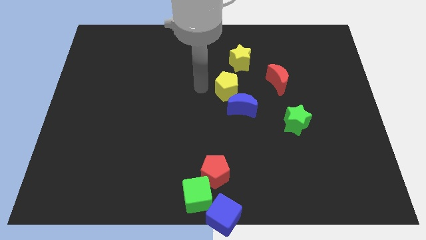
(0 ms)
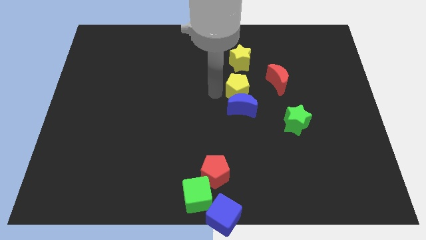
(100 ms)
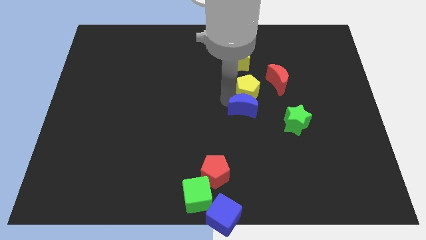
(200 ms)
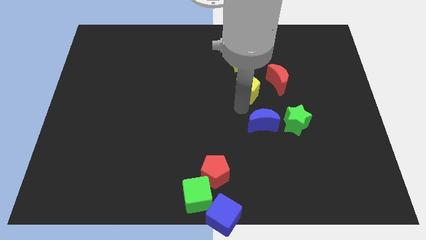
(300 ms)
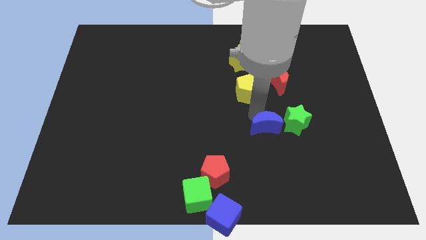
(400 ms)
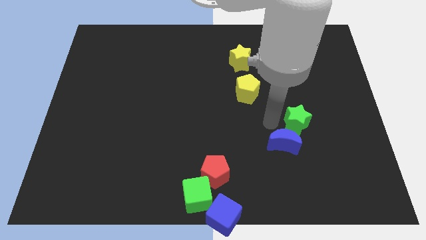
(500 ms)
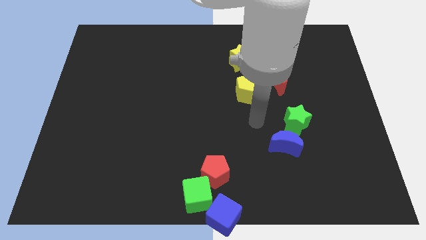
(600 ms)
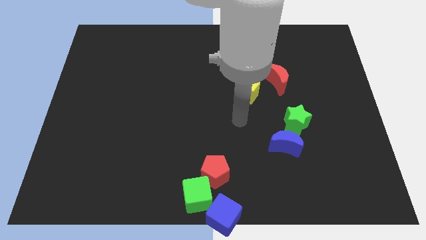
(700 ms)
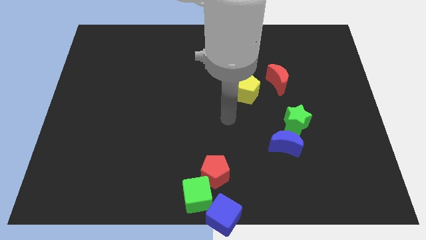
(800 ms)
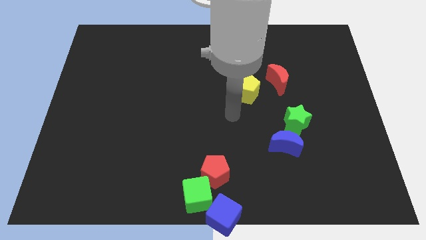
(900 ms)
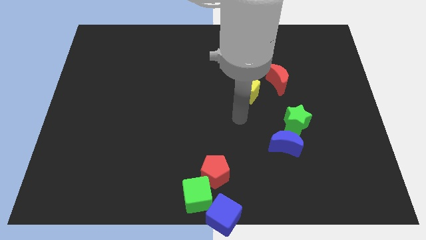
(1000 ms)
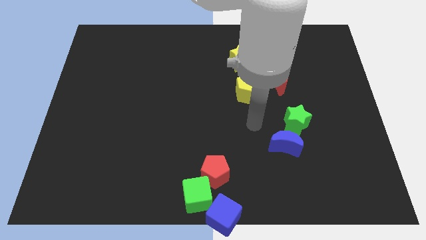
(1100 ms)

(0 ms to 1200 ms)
move the blue crescent to the bottom of the green star

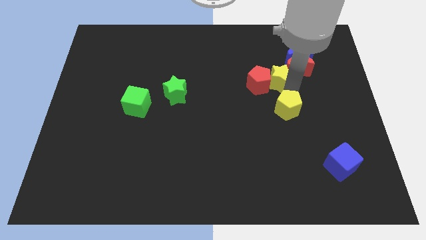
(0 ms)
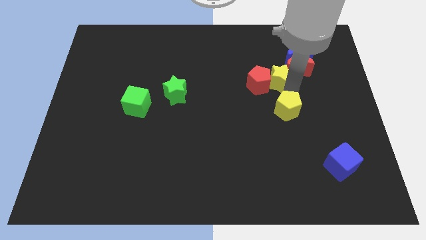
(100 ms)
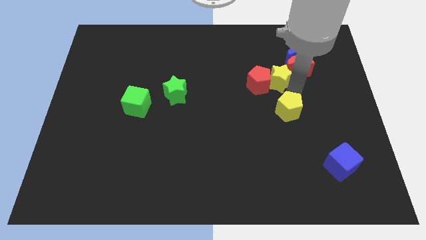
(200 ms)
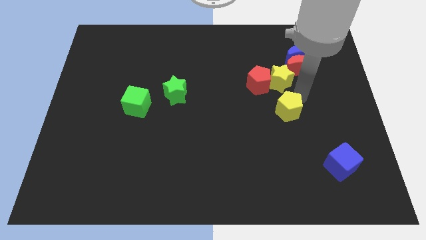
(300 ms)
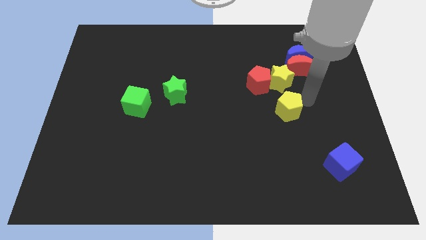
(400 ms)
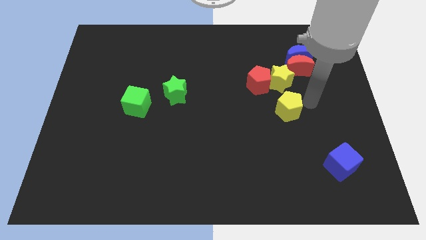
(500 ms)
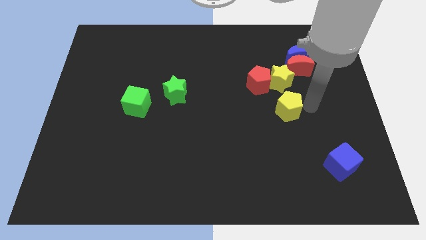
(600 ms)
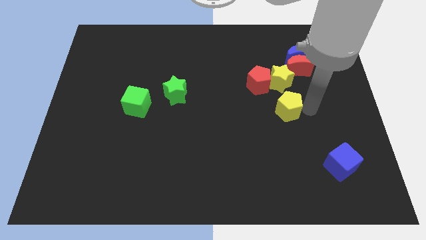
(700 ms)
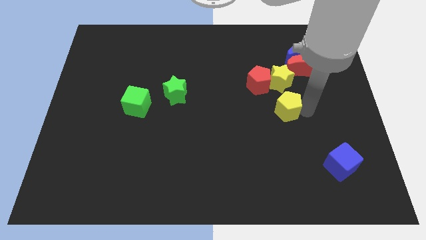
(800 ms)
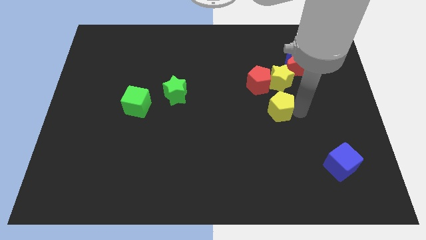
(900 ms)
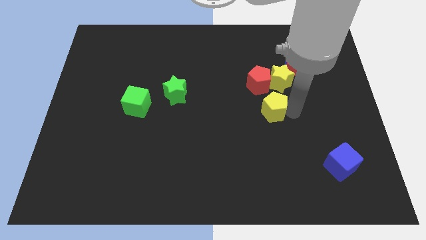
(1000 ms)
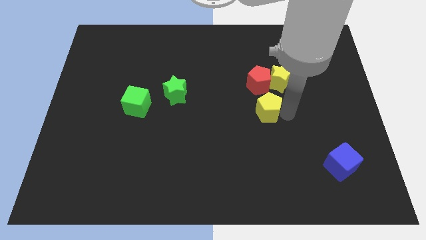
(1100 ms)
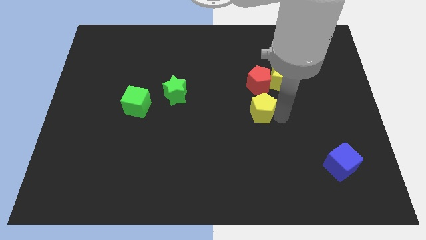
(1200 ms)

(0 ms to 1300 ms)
place the yellow pentagon vertically towards red pentagon

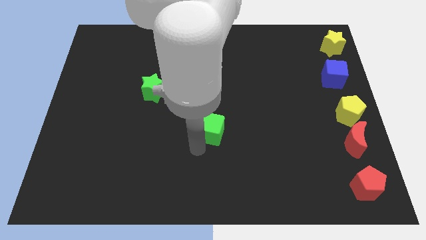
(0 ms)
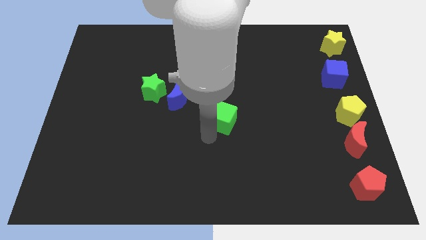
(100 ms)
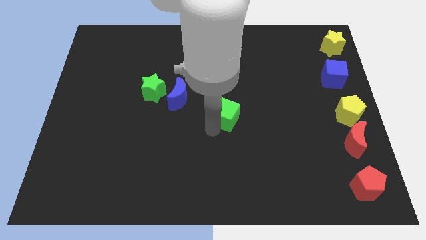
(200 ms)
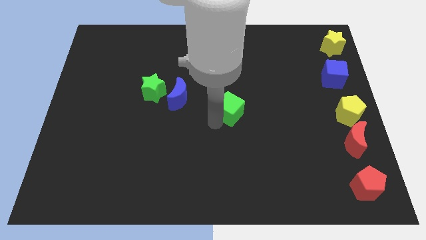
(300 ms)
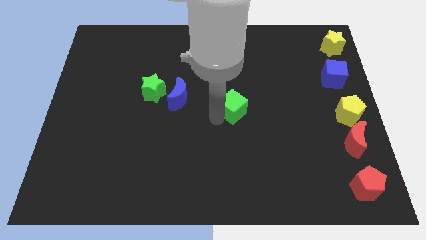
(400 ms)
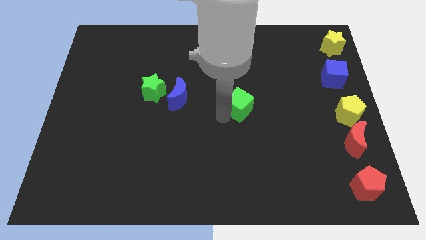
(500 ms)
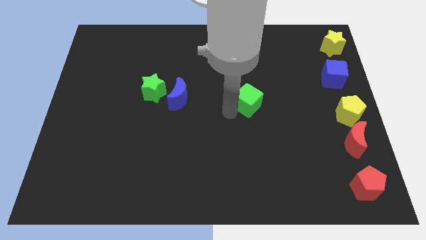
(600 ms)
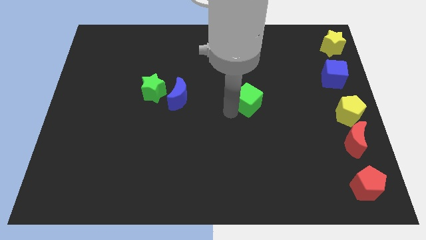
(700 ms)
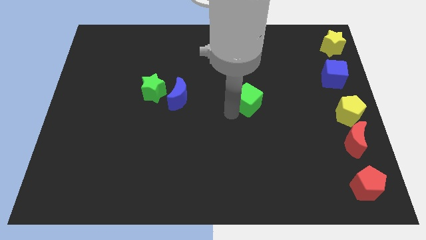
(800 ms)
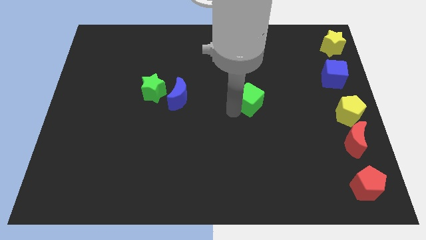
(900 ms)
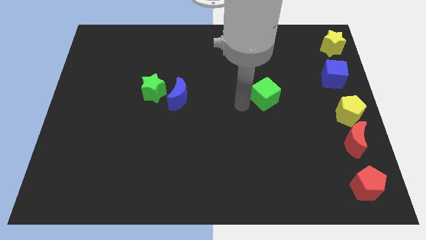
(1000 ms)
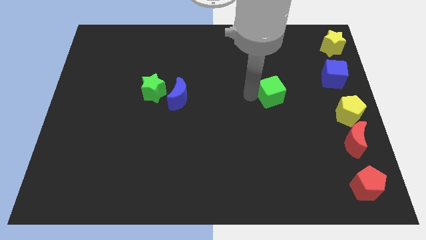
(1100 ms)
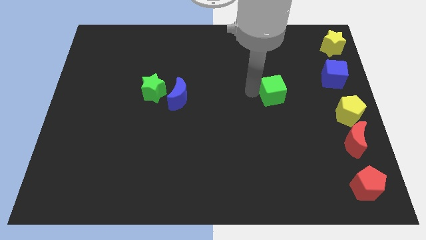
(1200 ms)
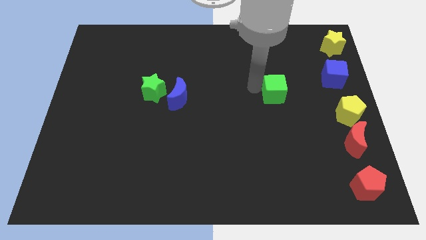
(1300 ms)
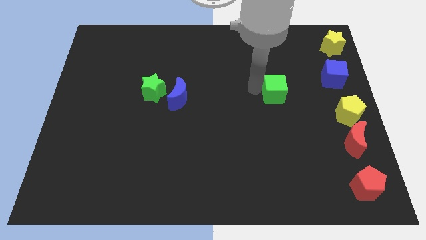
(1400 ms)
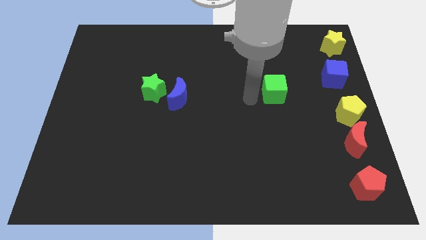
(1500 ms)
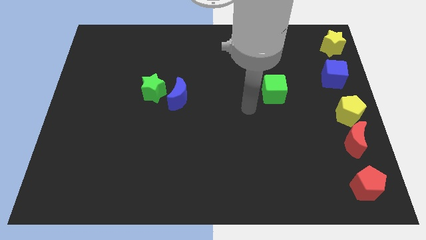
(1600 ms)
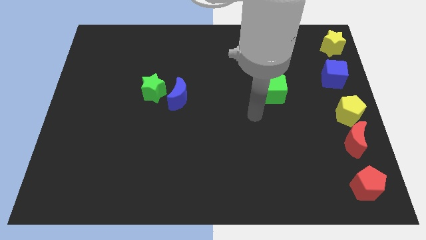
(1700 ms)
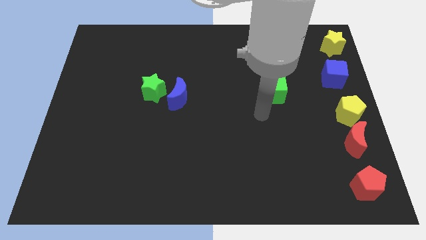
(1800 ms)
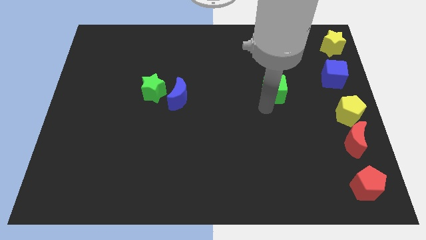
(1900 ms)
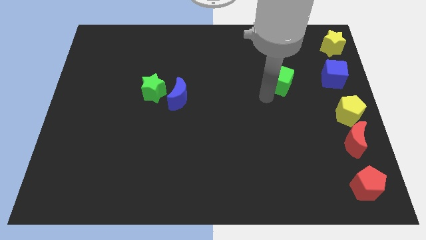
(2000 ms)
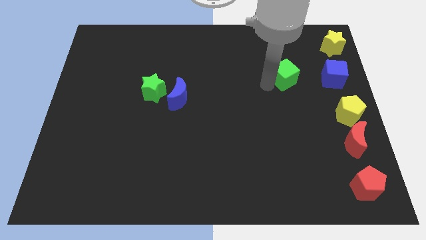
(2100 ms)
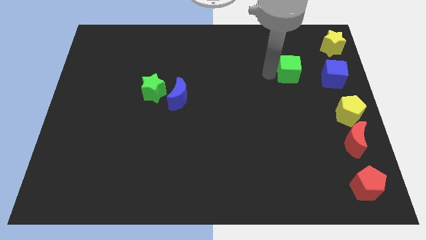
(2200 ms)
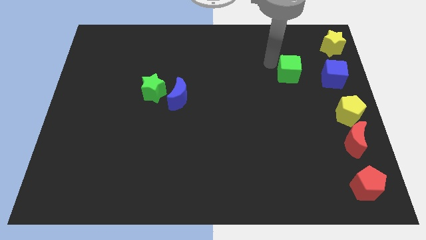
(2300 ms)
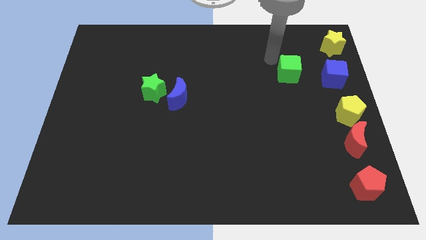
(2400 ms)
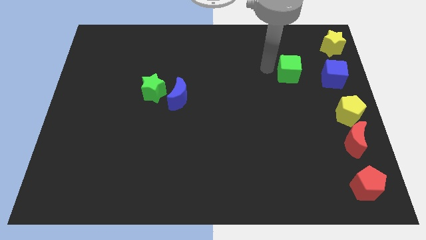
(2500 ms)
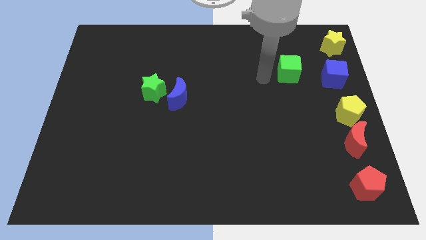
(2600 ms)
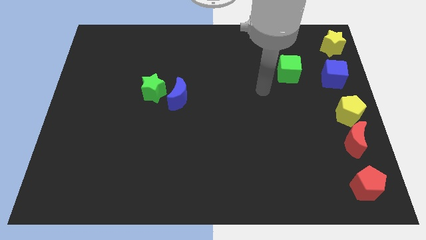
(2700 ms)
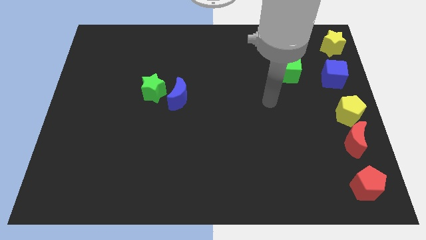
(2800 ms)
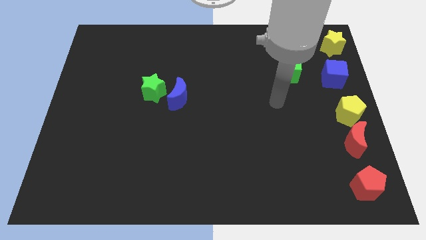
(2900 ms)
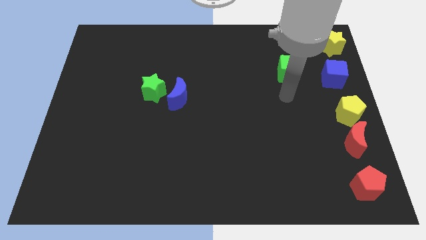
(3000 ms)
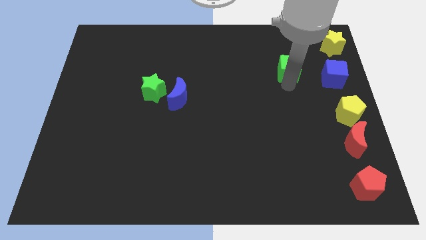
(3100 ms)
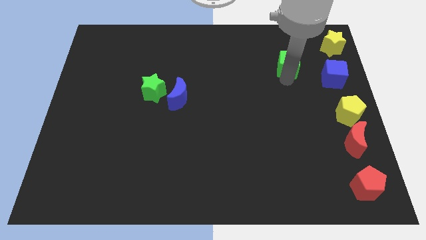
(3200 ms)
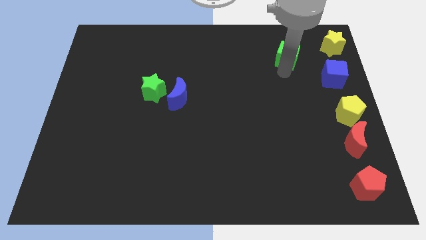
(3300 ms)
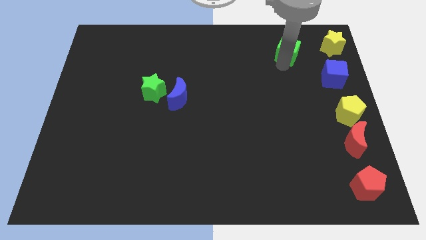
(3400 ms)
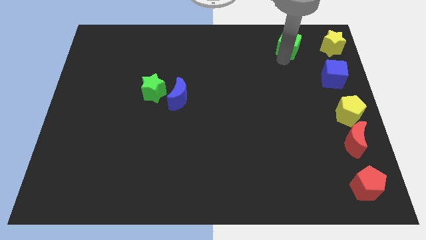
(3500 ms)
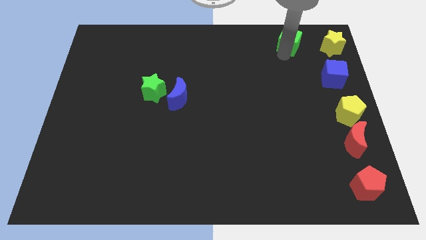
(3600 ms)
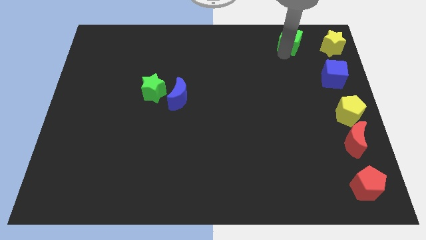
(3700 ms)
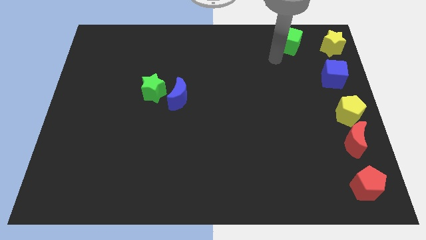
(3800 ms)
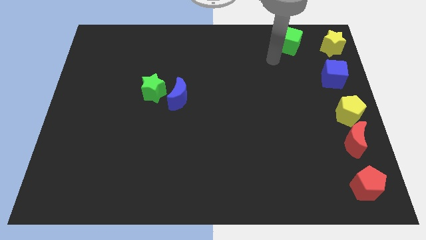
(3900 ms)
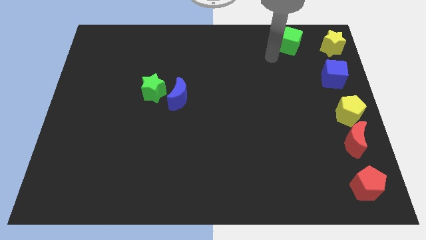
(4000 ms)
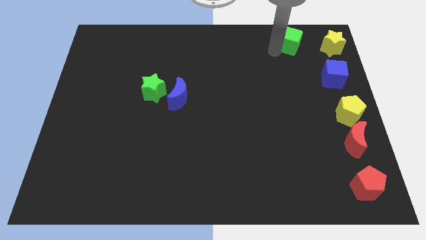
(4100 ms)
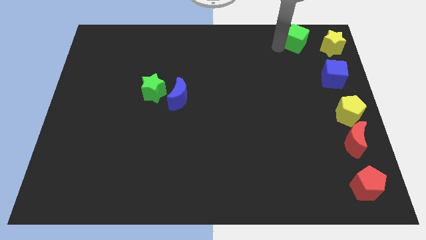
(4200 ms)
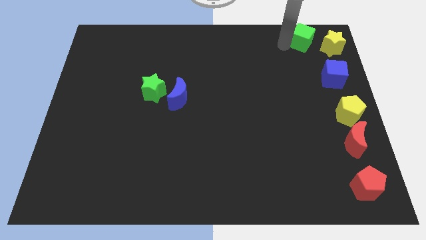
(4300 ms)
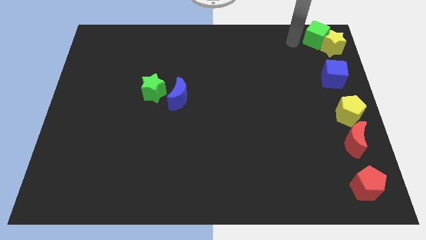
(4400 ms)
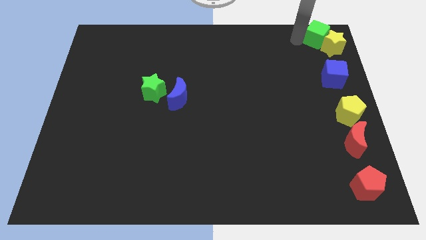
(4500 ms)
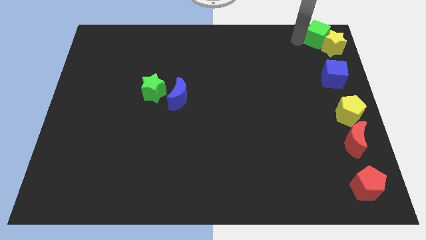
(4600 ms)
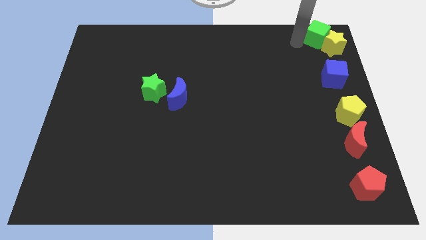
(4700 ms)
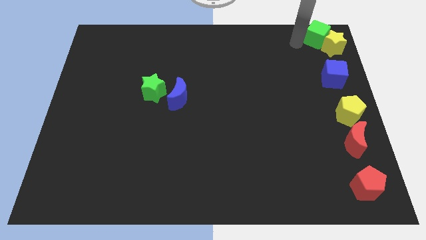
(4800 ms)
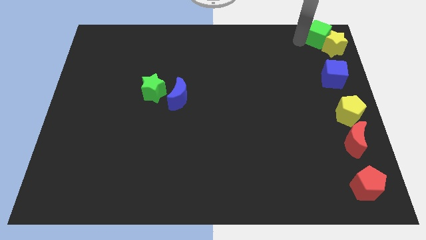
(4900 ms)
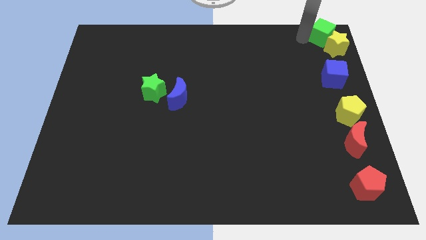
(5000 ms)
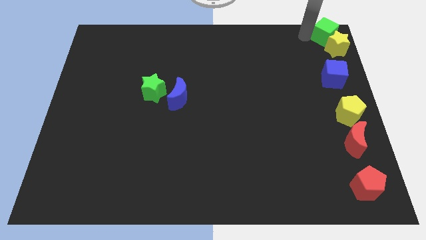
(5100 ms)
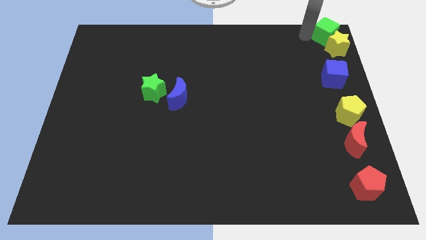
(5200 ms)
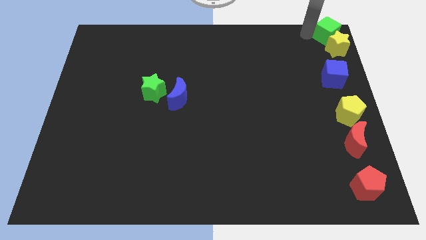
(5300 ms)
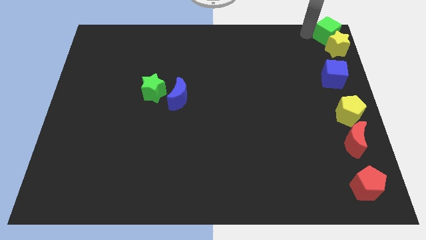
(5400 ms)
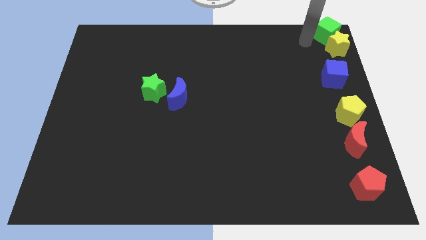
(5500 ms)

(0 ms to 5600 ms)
place green cube to the top right corner of the board

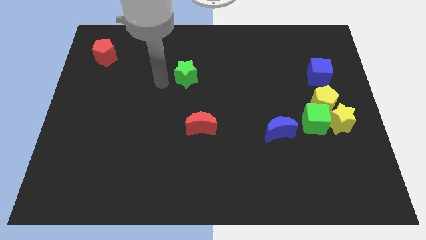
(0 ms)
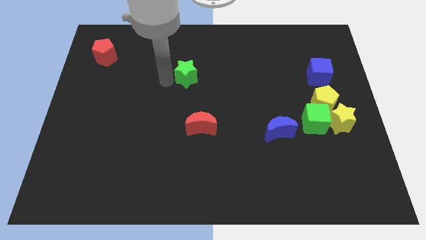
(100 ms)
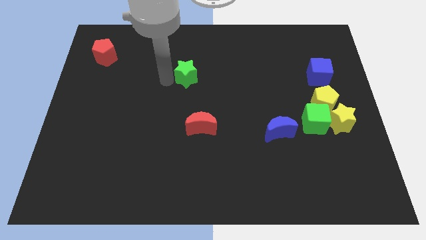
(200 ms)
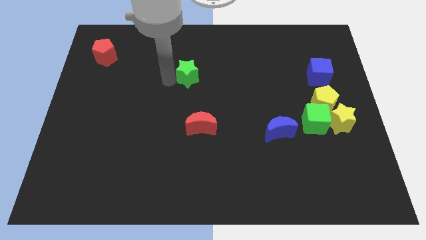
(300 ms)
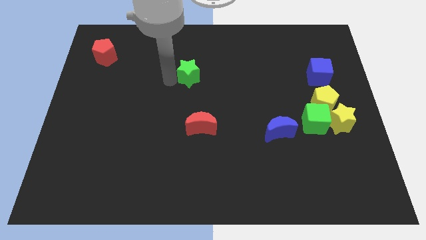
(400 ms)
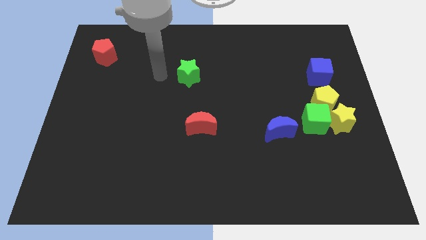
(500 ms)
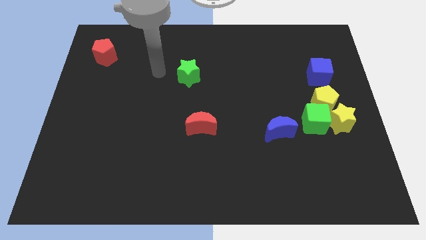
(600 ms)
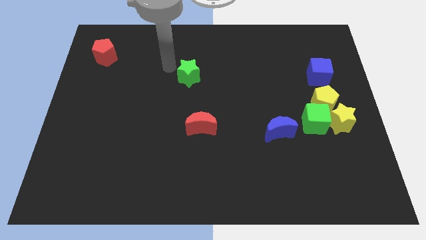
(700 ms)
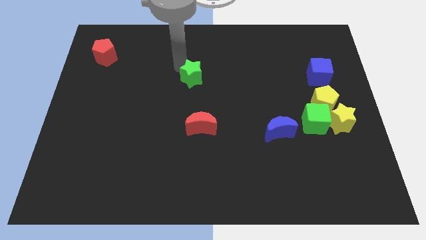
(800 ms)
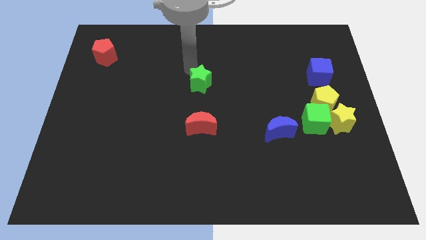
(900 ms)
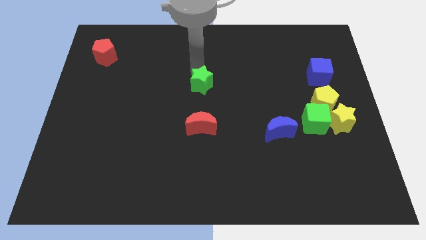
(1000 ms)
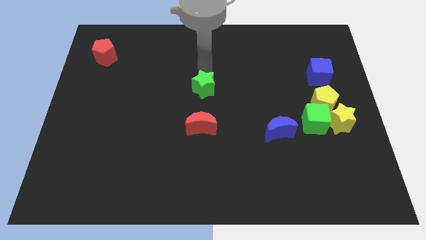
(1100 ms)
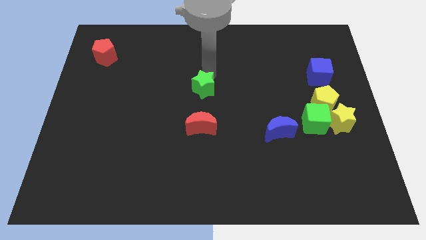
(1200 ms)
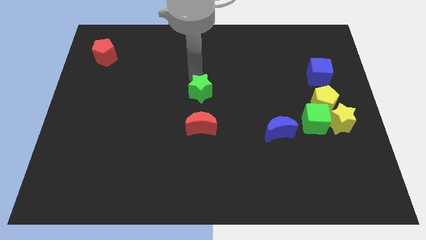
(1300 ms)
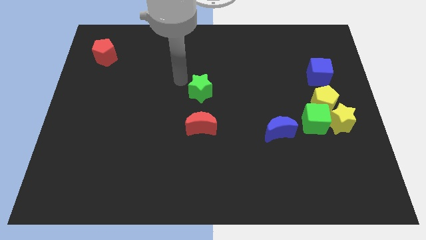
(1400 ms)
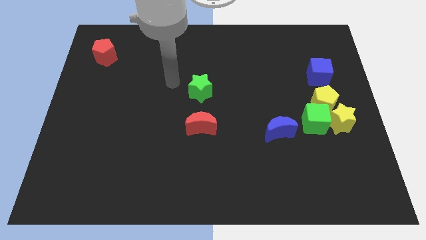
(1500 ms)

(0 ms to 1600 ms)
put the green star above the red crescent
